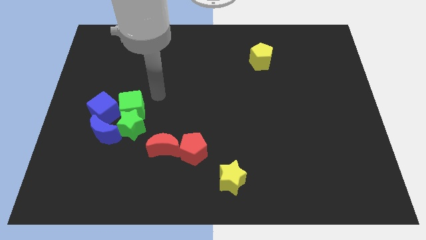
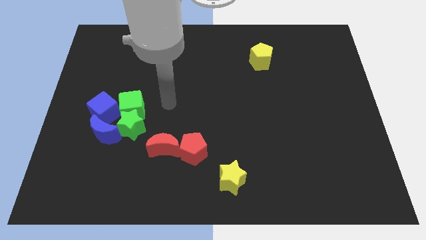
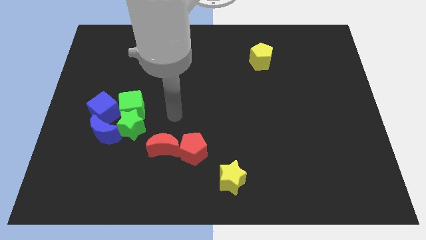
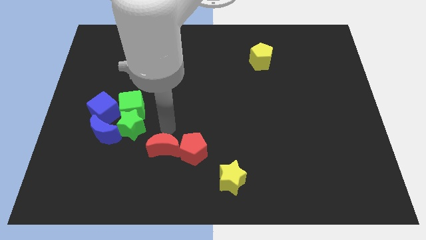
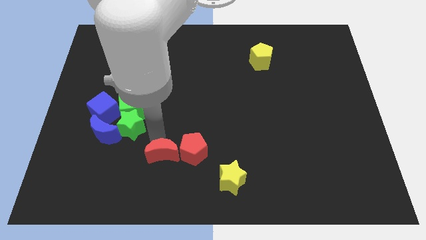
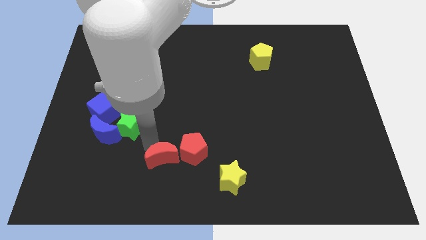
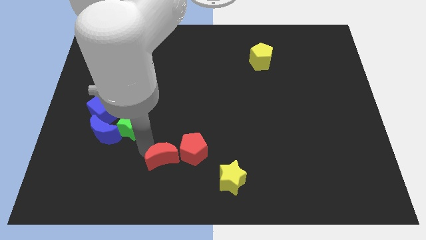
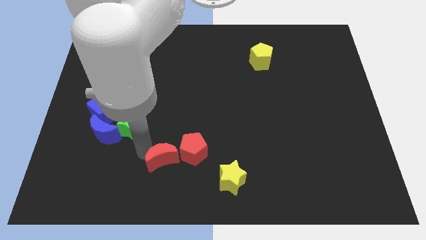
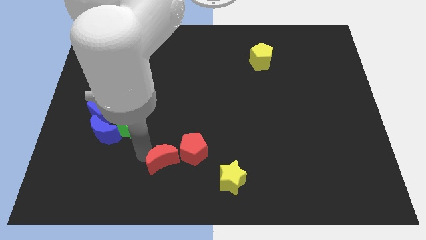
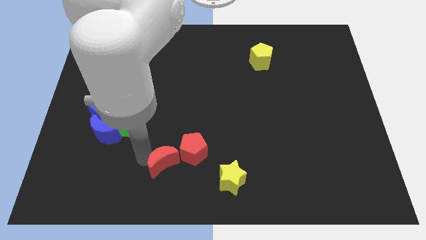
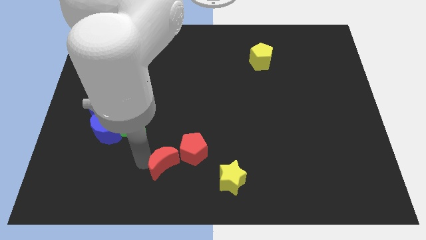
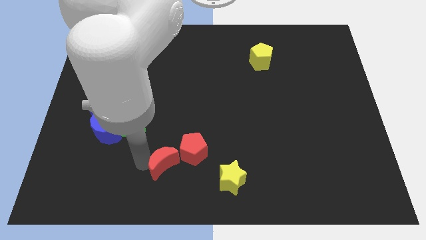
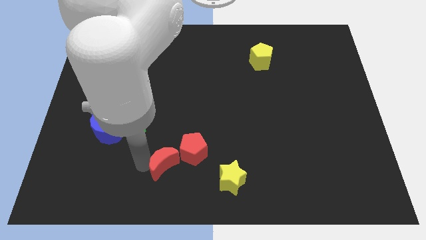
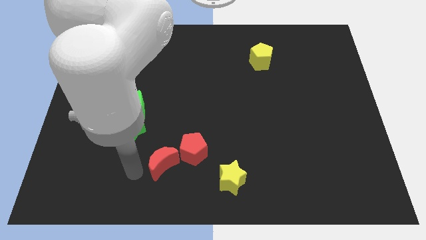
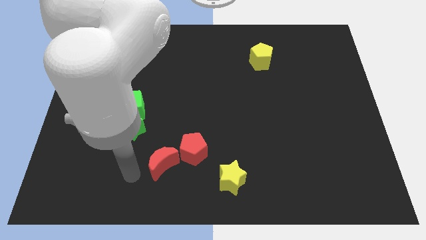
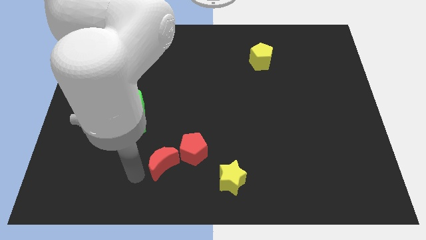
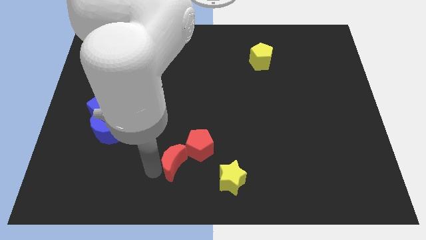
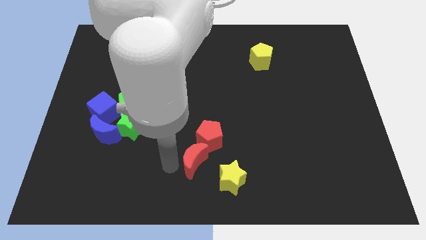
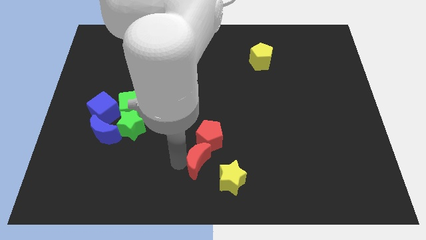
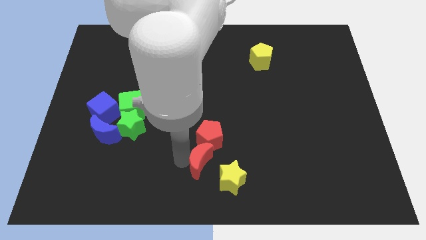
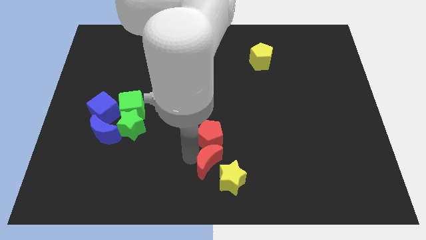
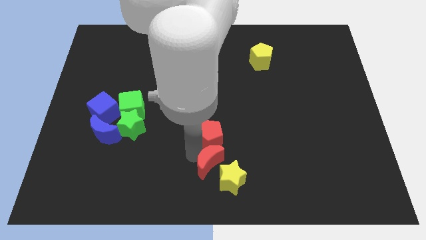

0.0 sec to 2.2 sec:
push the red crescent towards the yellow star

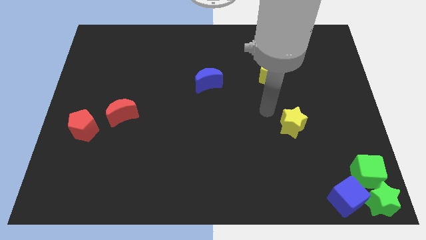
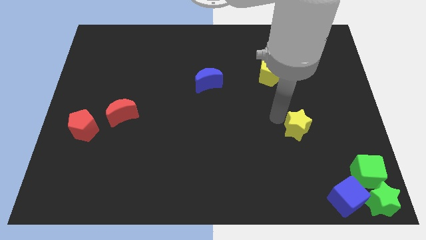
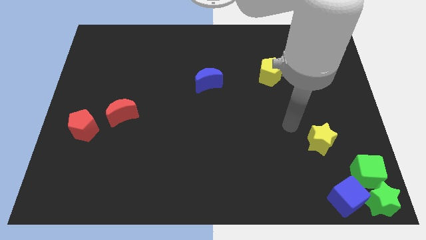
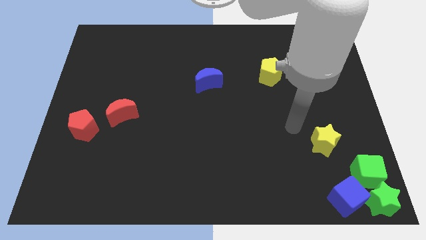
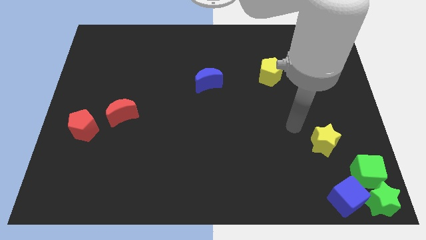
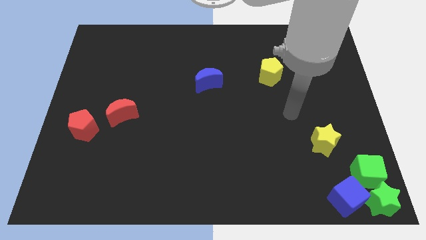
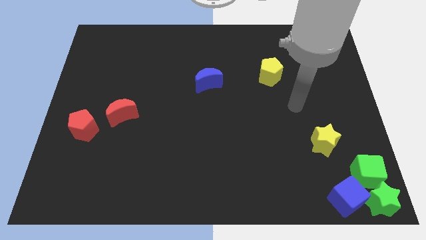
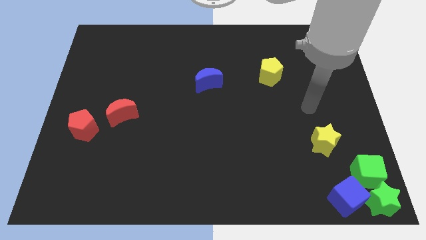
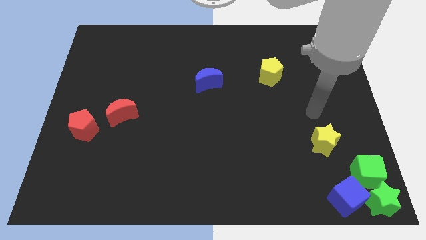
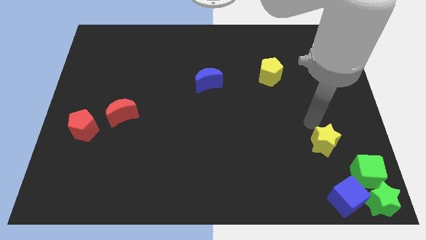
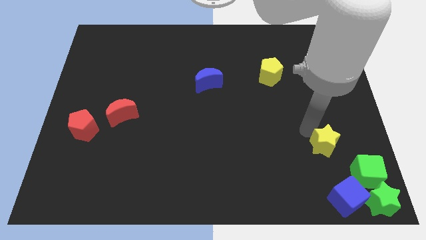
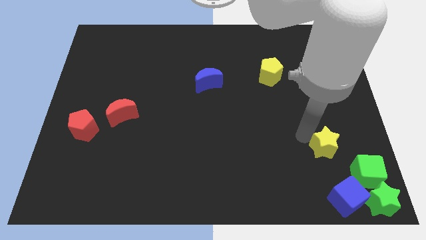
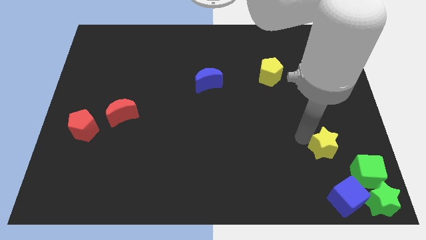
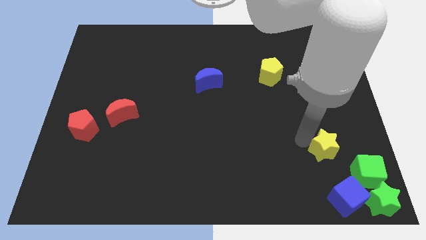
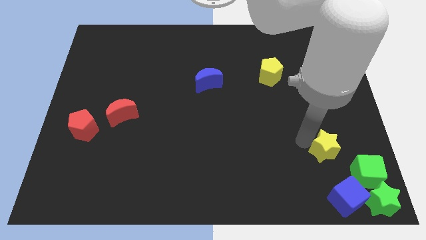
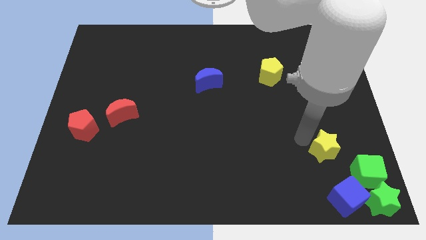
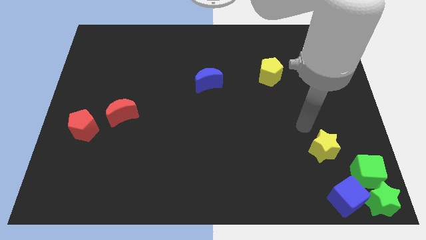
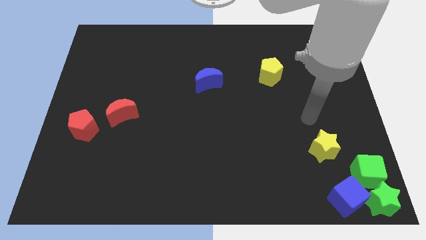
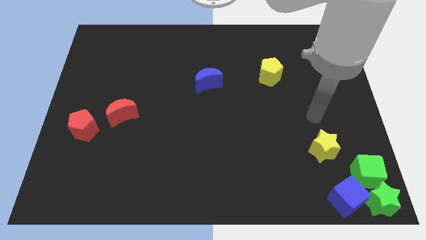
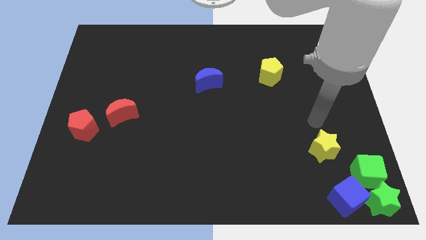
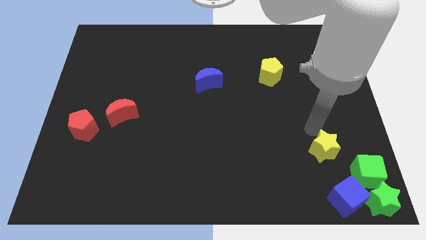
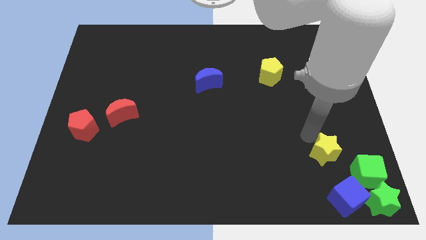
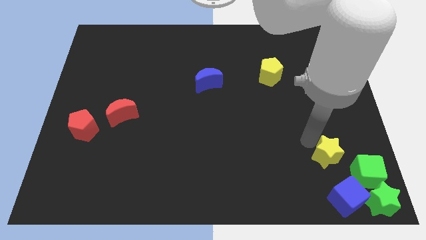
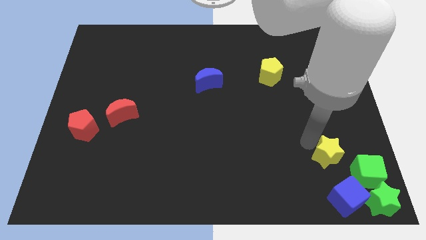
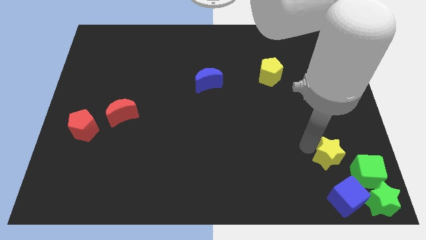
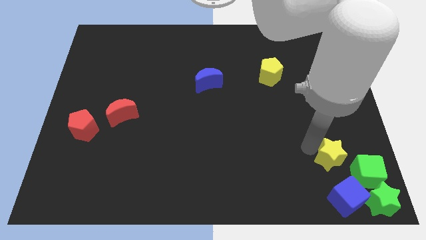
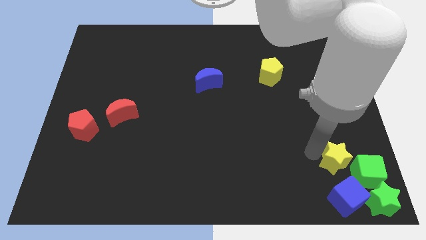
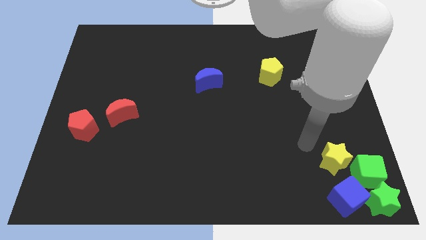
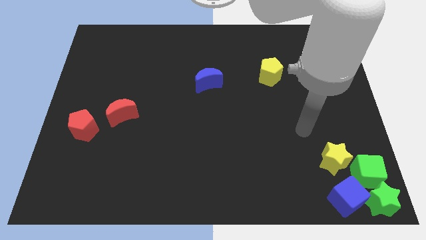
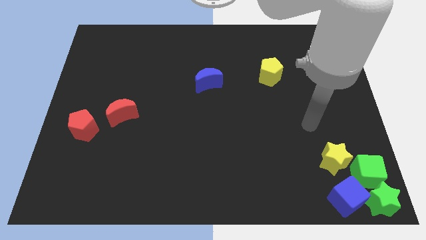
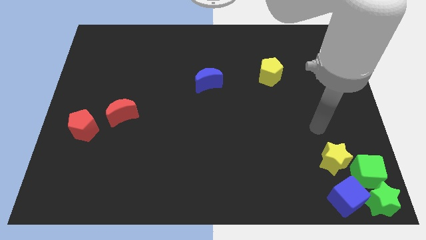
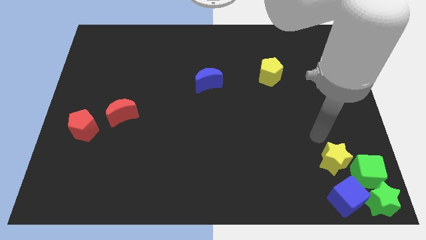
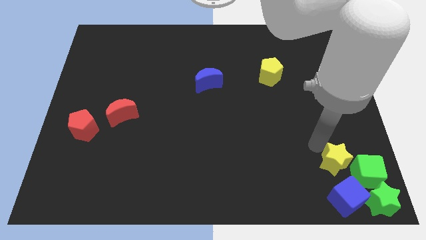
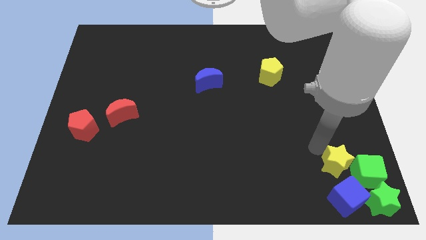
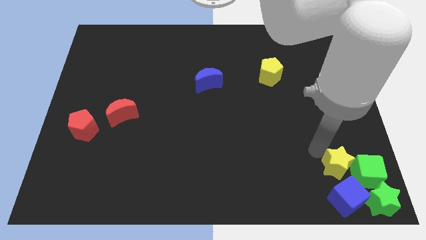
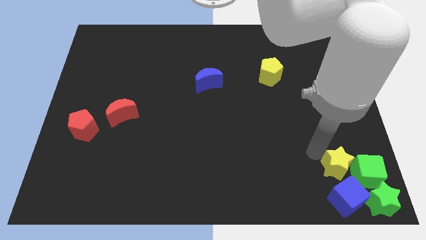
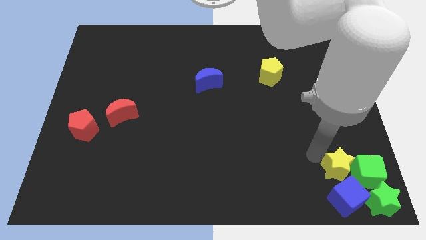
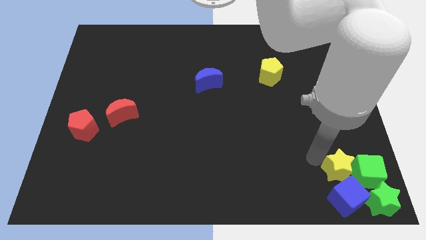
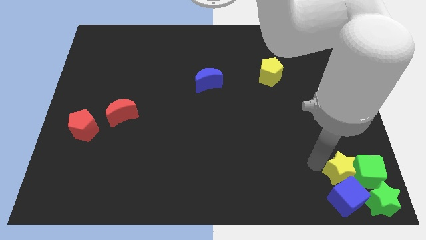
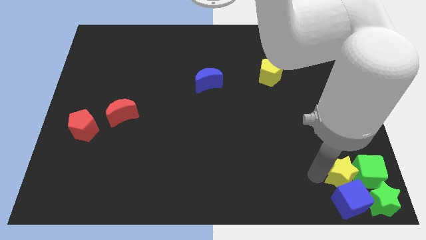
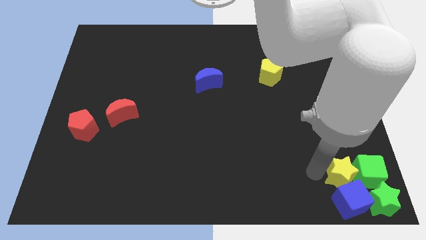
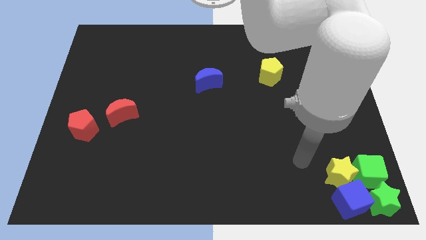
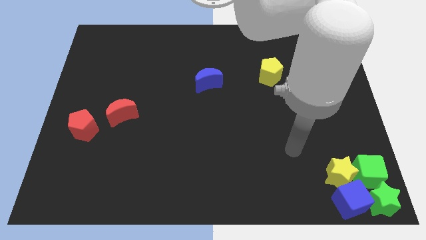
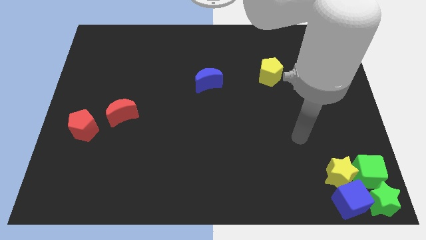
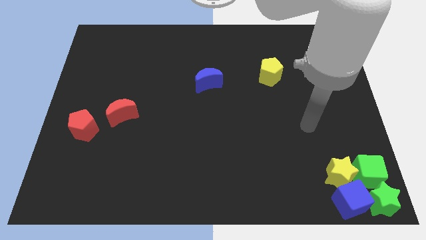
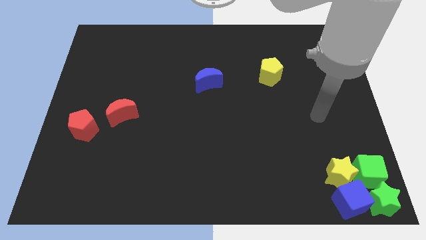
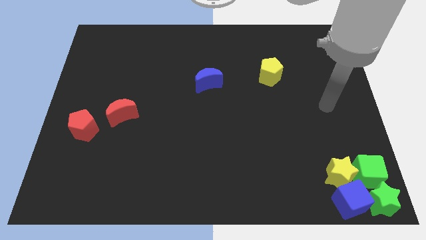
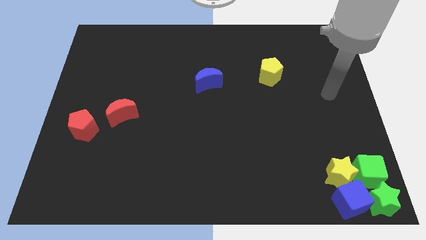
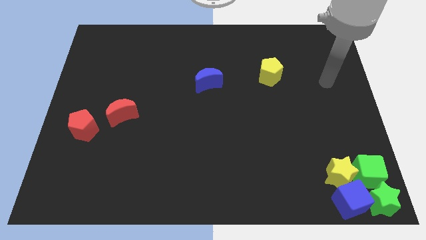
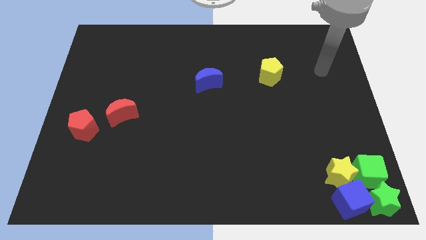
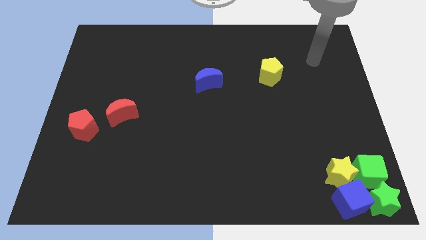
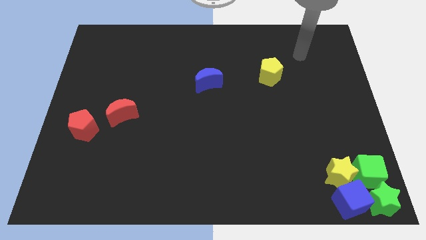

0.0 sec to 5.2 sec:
push the yellow star towards the group of blocks

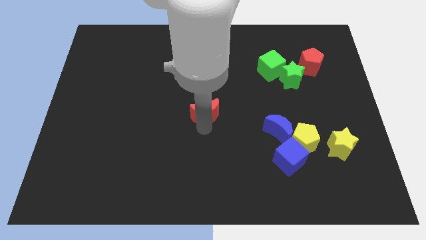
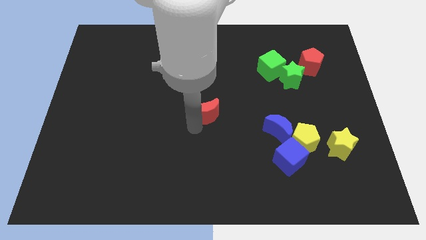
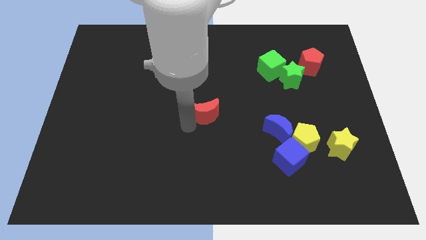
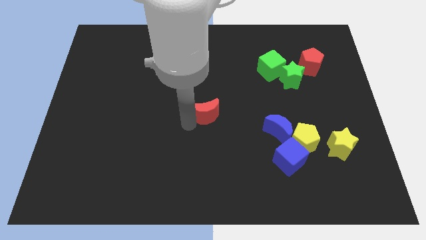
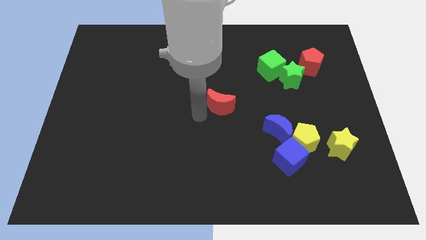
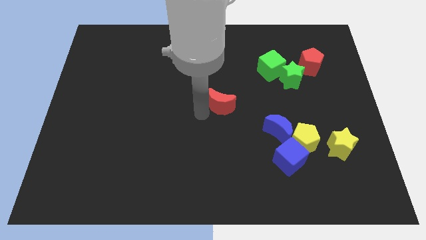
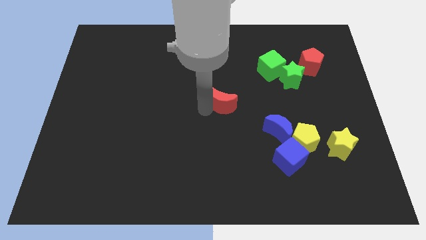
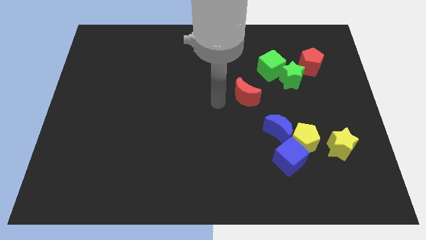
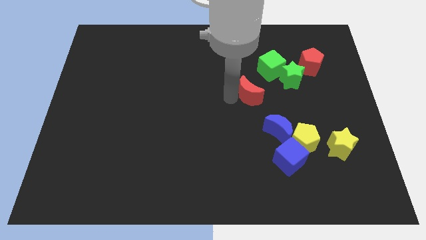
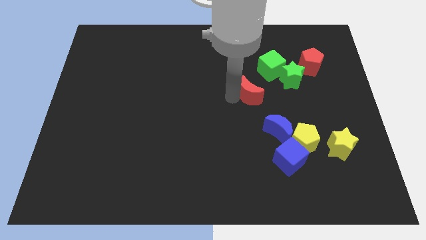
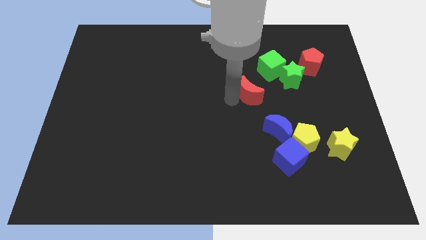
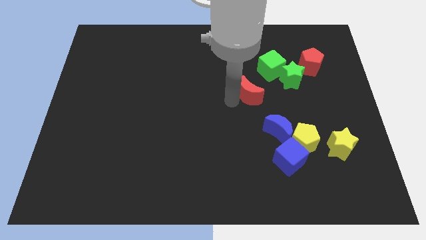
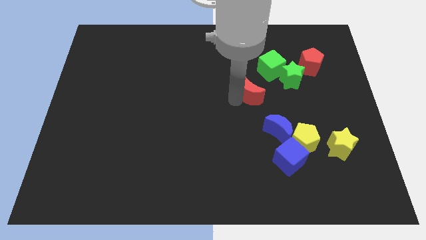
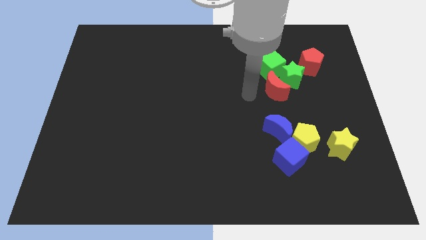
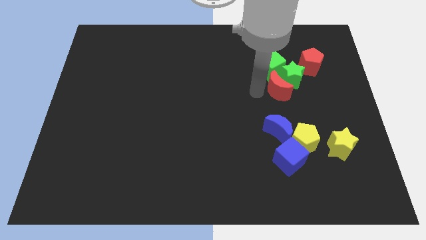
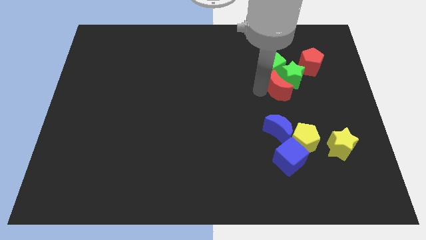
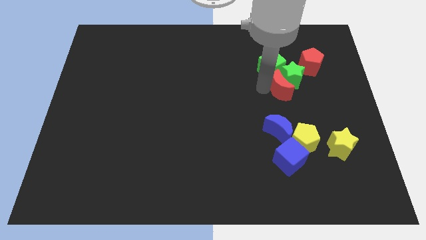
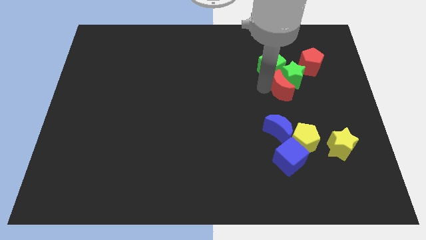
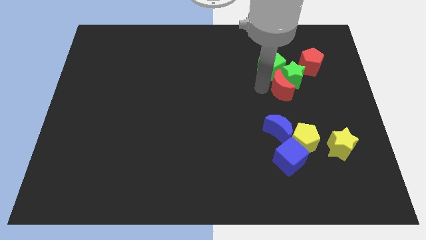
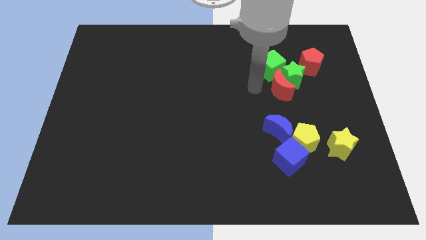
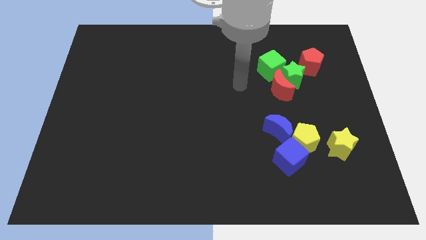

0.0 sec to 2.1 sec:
place the red crescent into the green star
